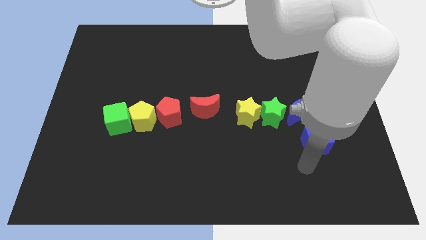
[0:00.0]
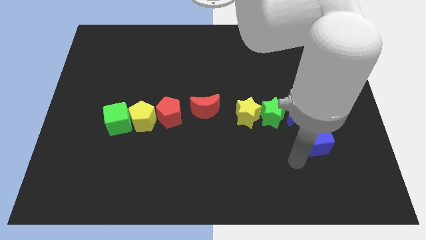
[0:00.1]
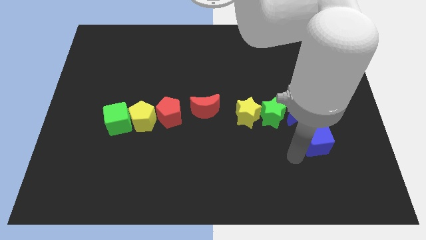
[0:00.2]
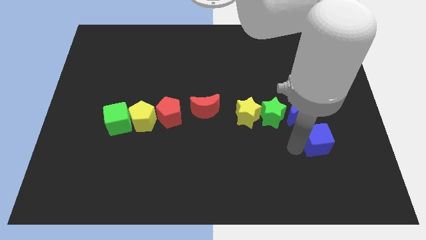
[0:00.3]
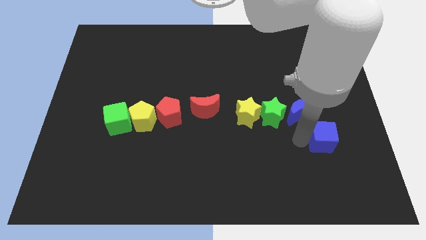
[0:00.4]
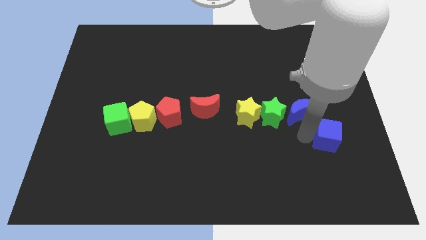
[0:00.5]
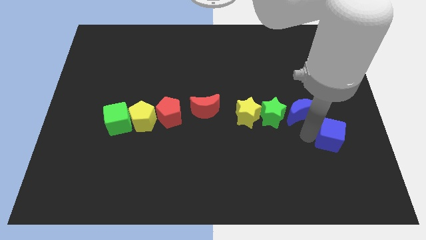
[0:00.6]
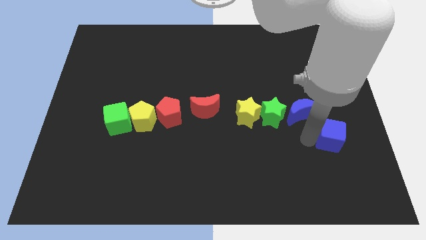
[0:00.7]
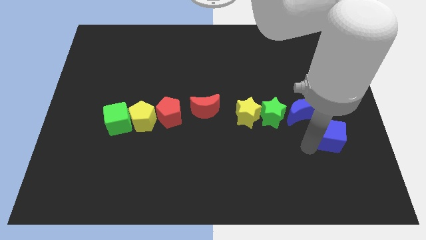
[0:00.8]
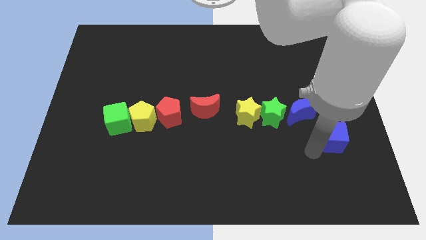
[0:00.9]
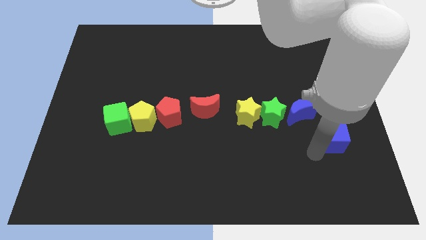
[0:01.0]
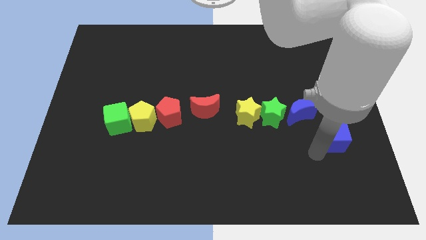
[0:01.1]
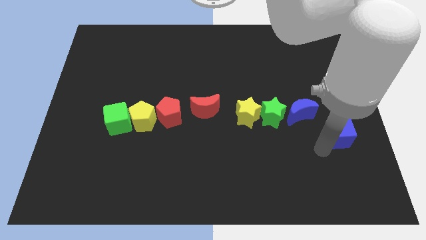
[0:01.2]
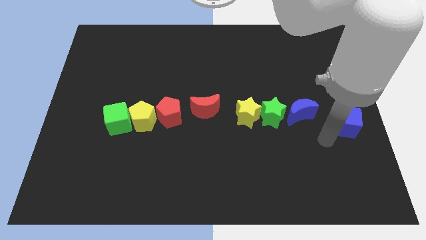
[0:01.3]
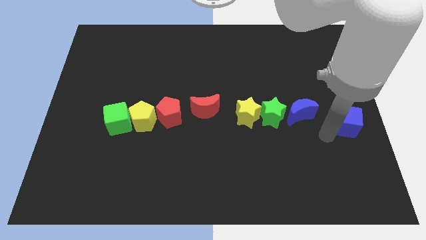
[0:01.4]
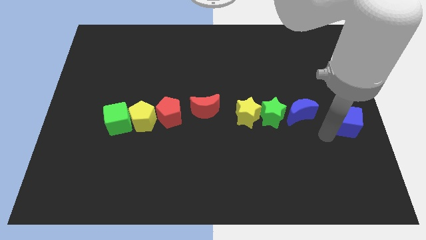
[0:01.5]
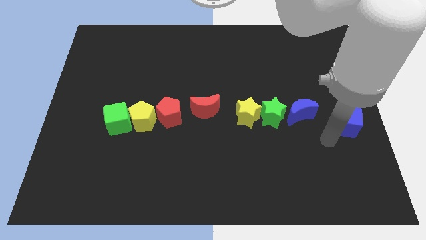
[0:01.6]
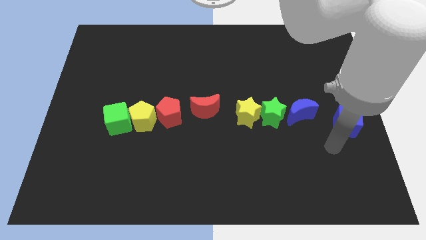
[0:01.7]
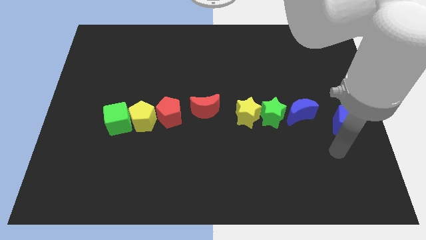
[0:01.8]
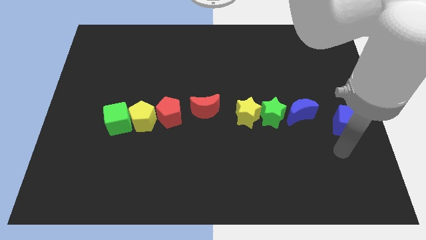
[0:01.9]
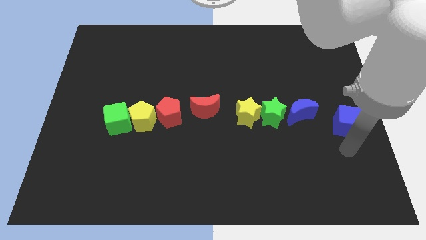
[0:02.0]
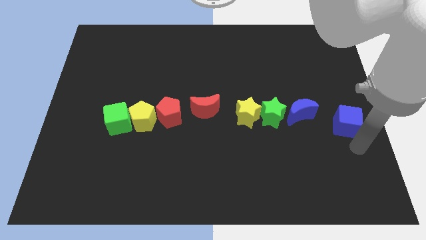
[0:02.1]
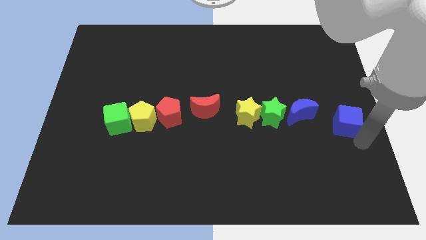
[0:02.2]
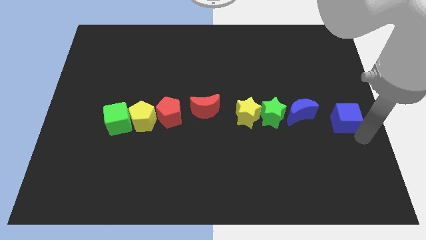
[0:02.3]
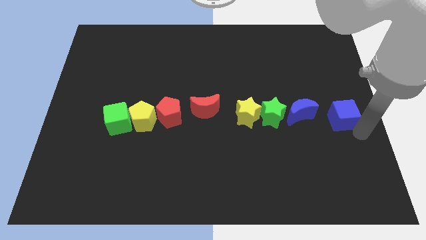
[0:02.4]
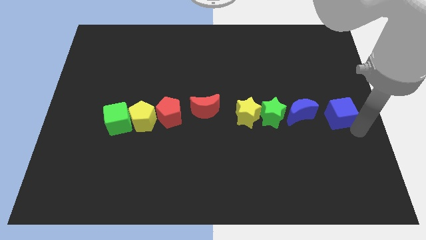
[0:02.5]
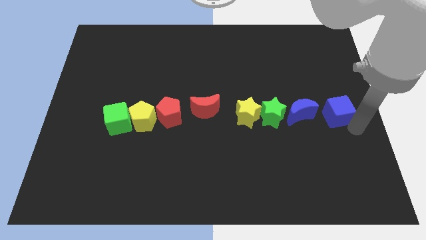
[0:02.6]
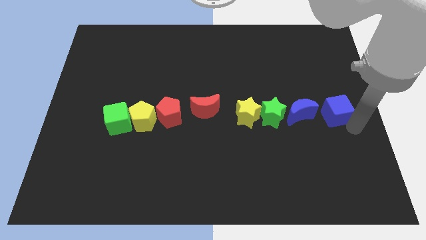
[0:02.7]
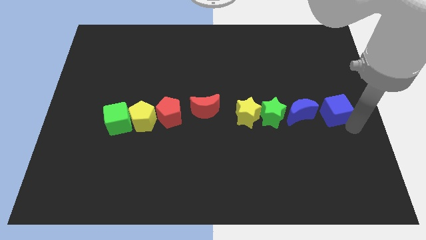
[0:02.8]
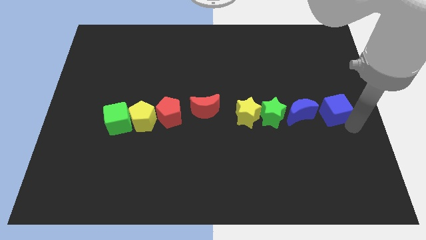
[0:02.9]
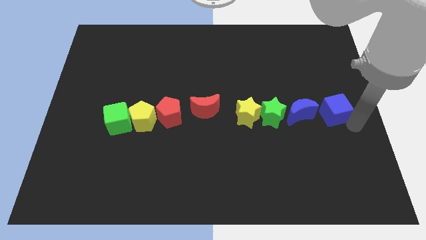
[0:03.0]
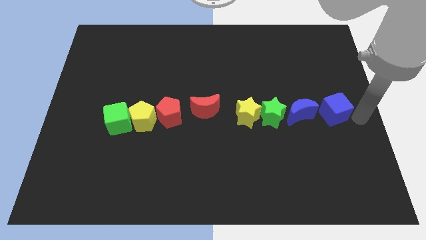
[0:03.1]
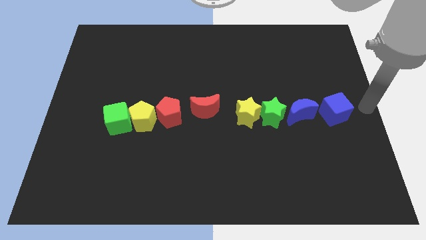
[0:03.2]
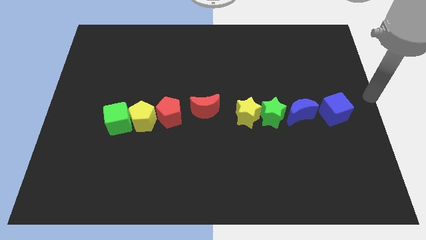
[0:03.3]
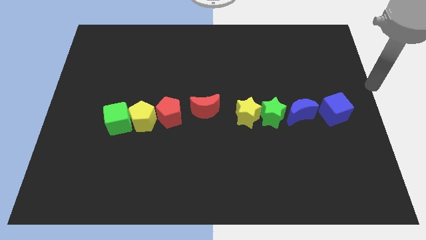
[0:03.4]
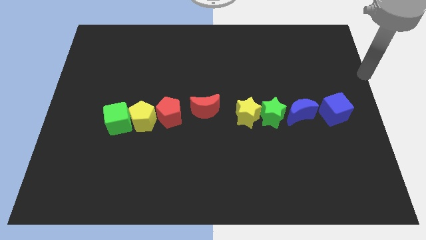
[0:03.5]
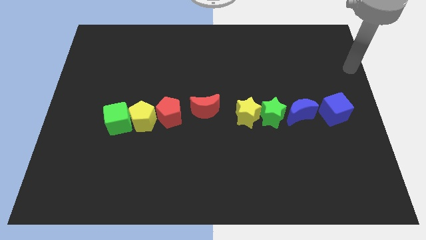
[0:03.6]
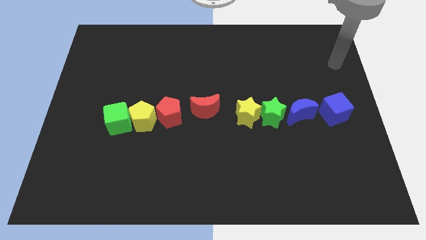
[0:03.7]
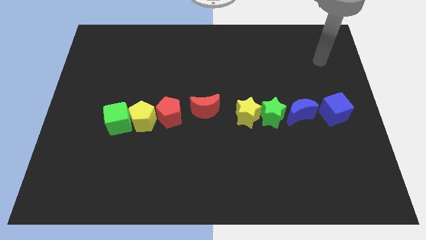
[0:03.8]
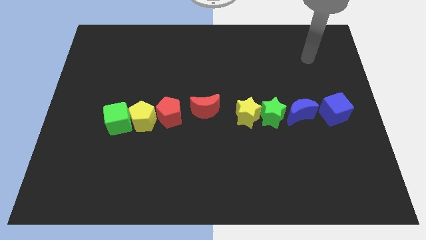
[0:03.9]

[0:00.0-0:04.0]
push the blue cube to the right side of the blue moon

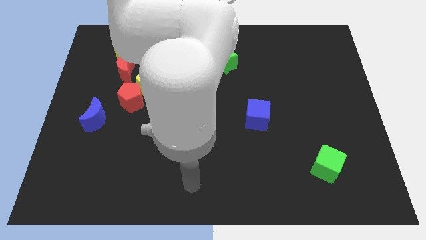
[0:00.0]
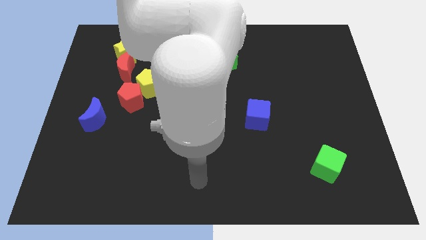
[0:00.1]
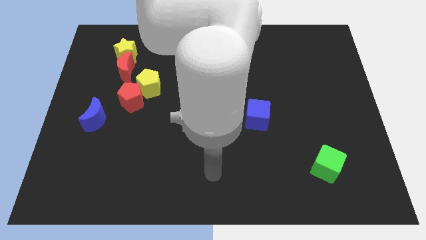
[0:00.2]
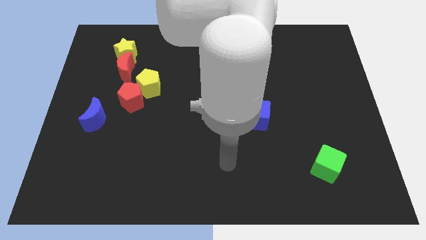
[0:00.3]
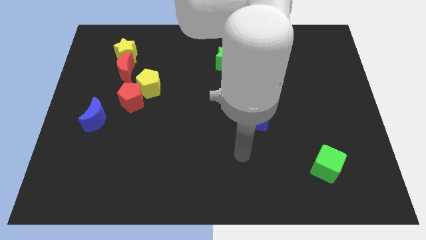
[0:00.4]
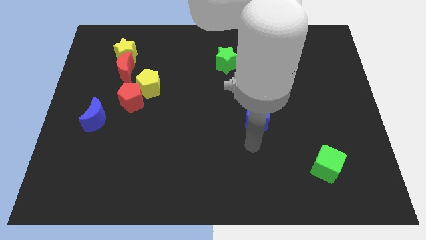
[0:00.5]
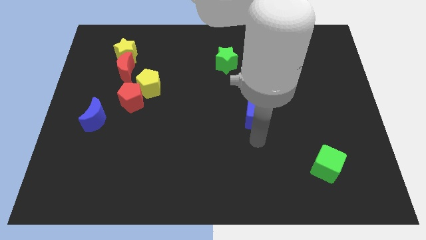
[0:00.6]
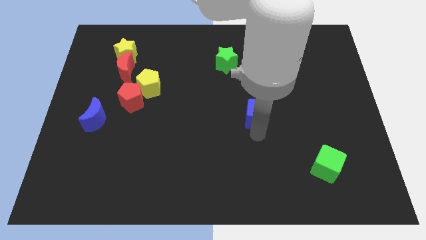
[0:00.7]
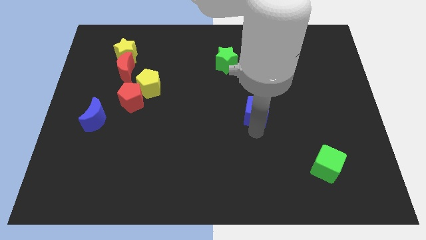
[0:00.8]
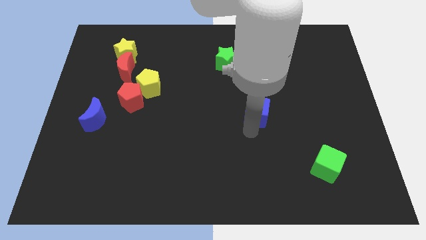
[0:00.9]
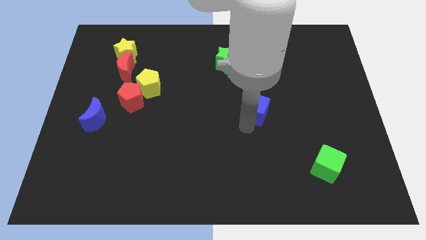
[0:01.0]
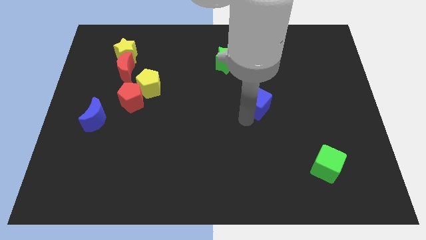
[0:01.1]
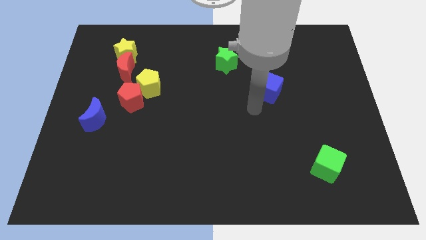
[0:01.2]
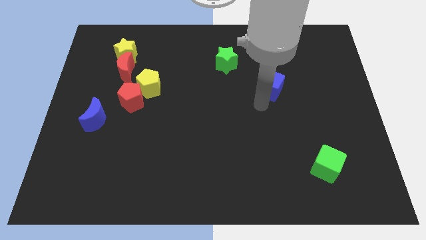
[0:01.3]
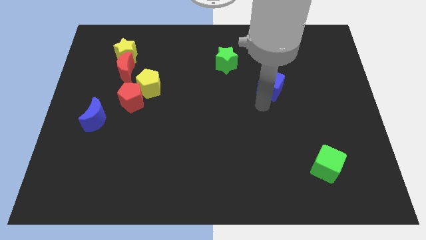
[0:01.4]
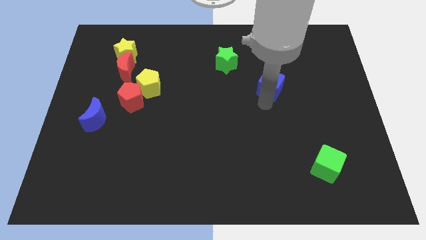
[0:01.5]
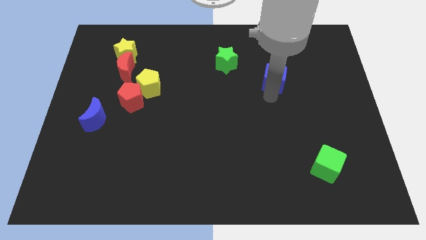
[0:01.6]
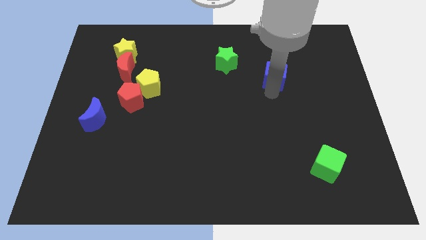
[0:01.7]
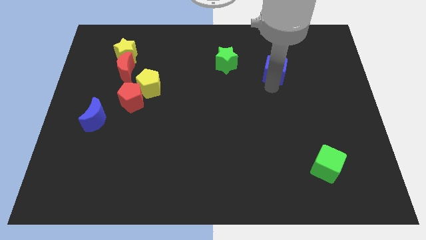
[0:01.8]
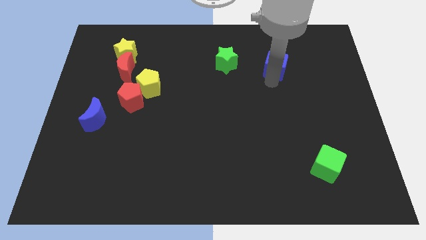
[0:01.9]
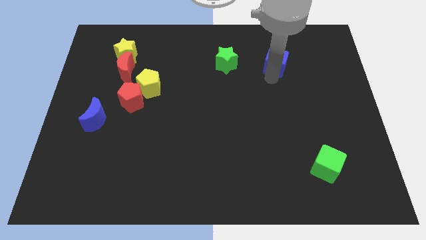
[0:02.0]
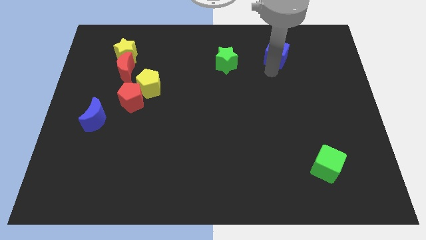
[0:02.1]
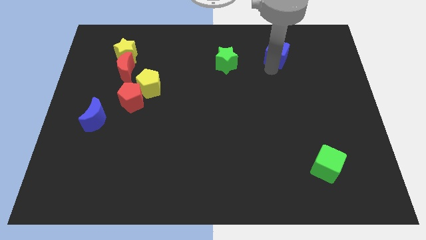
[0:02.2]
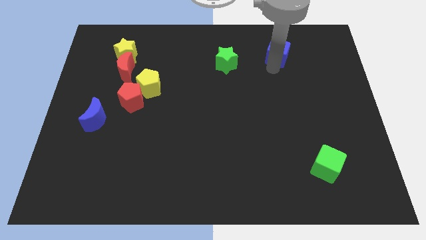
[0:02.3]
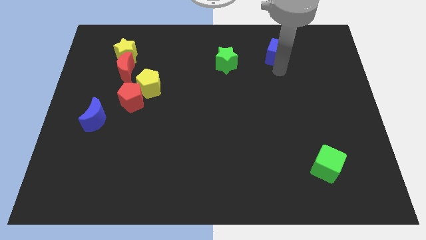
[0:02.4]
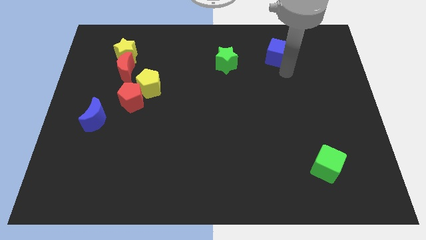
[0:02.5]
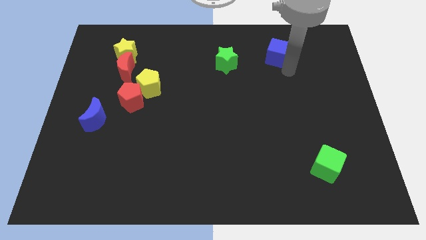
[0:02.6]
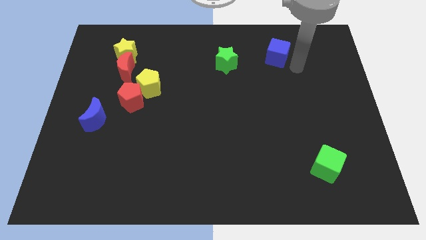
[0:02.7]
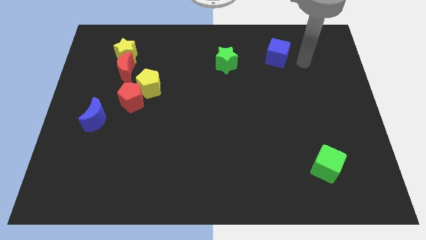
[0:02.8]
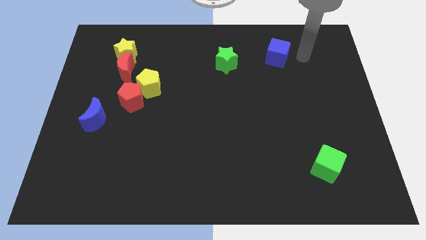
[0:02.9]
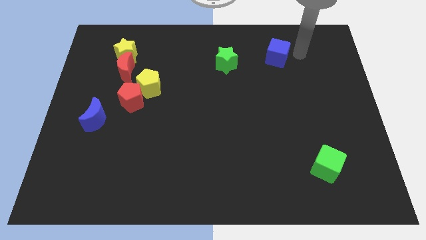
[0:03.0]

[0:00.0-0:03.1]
place blue cube to the right of green star

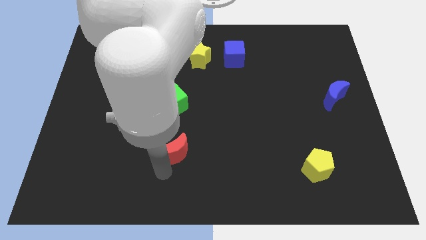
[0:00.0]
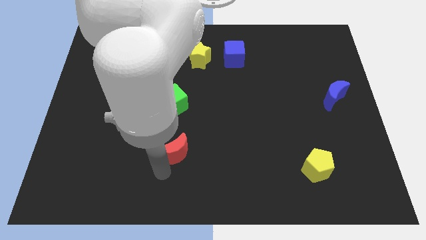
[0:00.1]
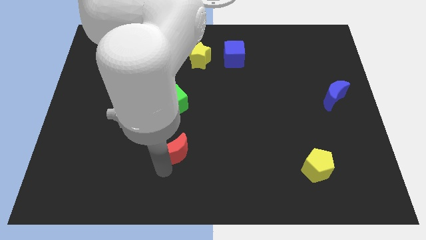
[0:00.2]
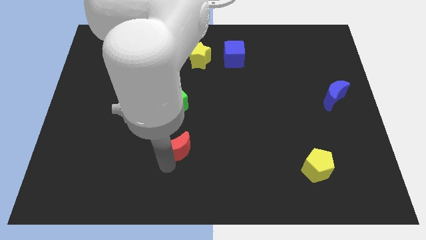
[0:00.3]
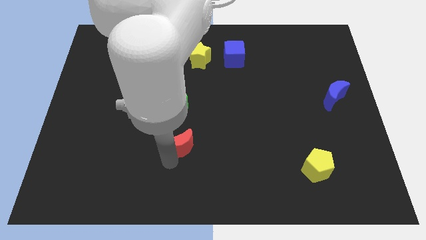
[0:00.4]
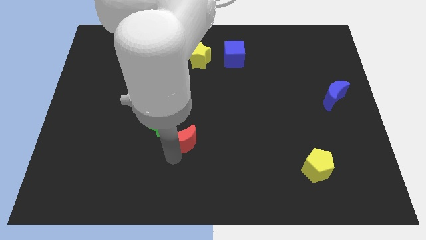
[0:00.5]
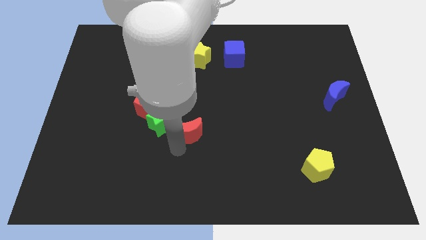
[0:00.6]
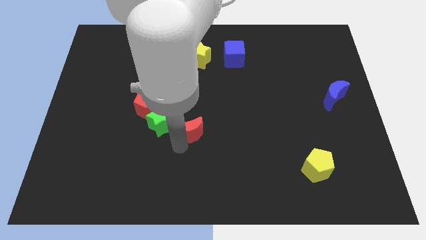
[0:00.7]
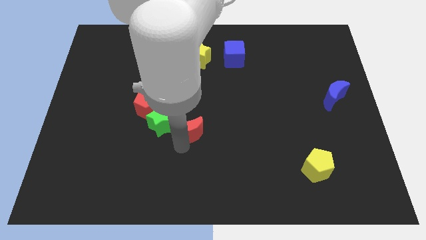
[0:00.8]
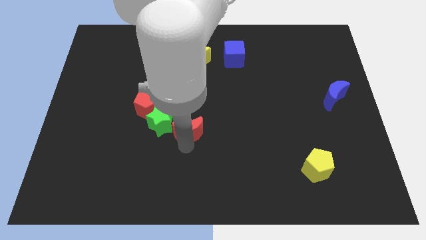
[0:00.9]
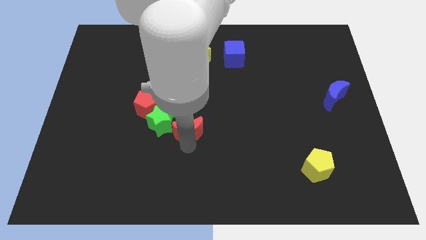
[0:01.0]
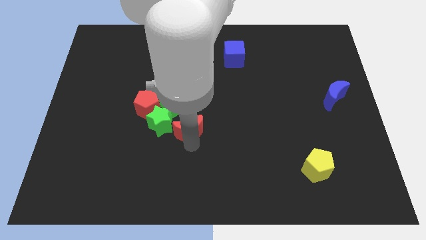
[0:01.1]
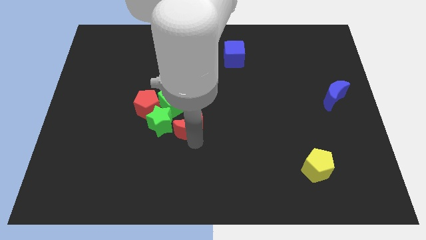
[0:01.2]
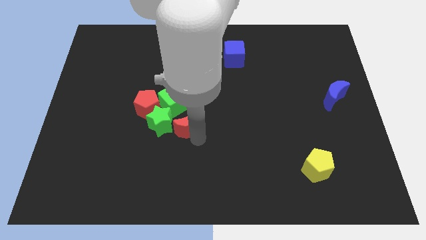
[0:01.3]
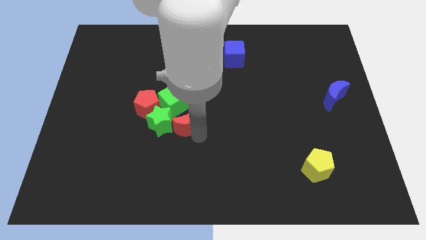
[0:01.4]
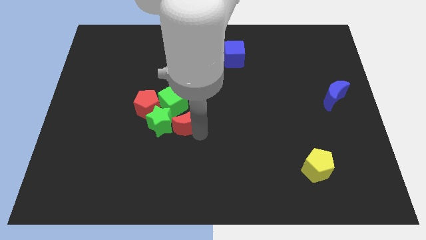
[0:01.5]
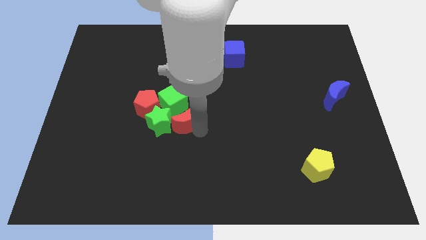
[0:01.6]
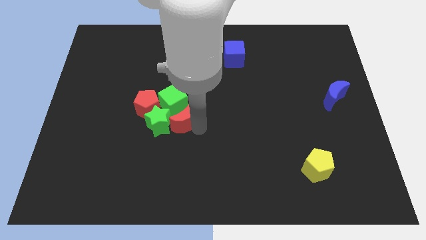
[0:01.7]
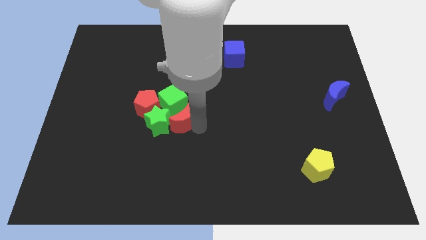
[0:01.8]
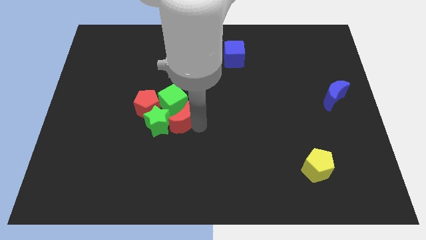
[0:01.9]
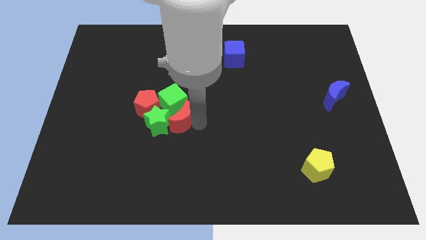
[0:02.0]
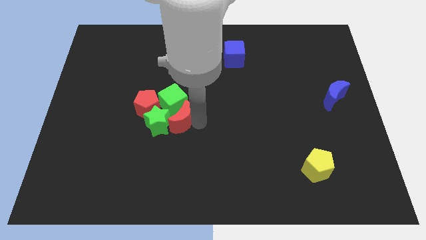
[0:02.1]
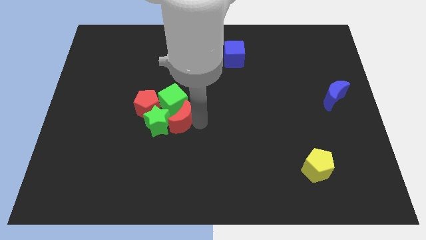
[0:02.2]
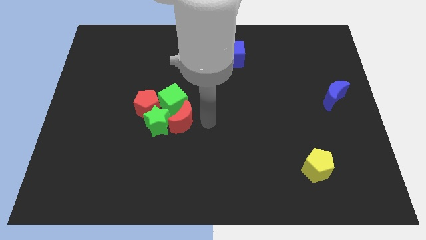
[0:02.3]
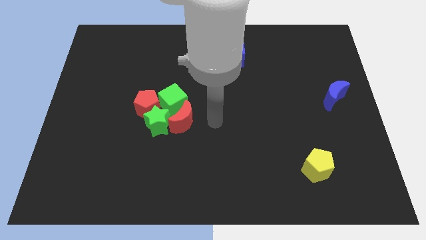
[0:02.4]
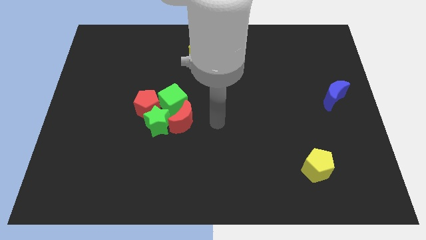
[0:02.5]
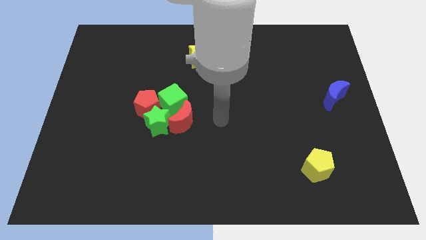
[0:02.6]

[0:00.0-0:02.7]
push the red crescent into green blocks to the right
